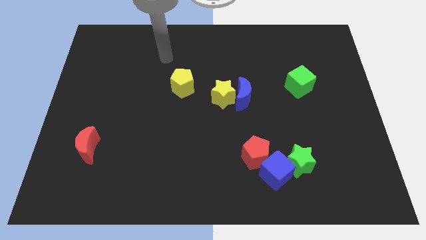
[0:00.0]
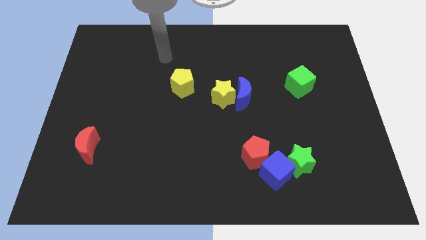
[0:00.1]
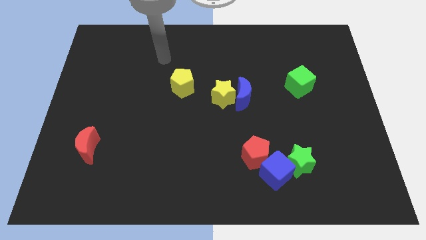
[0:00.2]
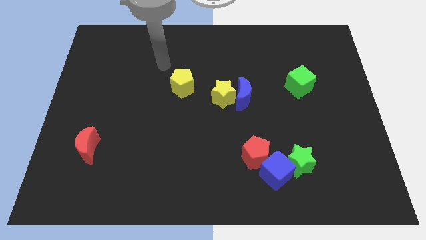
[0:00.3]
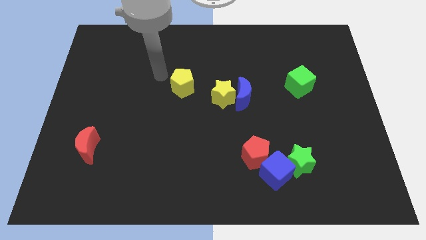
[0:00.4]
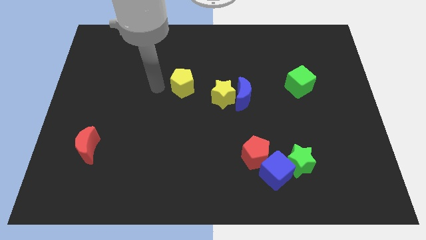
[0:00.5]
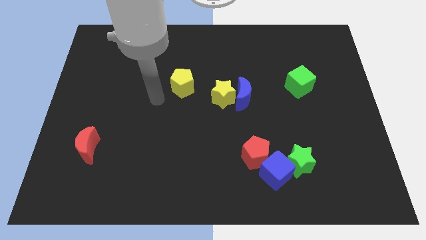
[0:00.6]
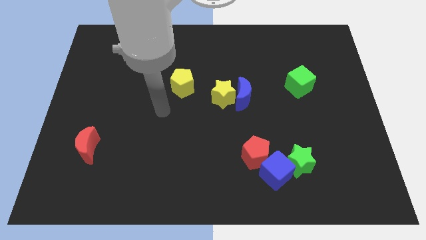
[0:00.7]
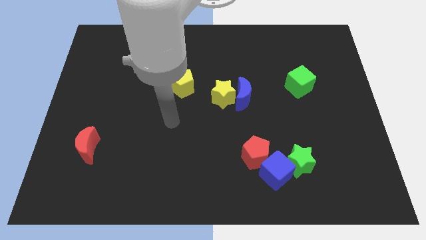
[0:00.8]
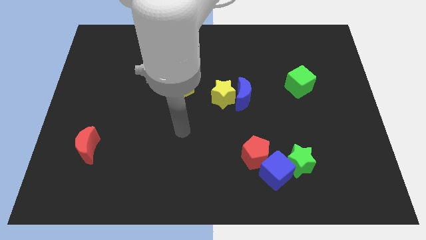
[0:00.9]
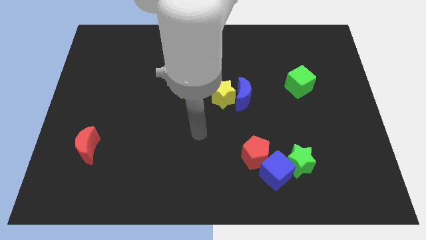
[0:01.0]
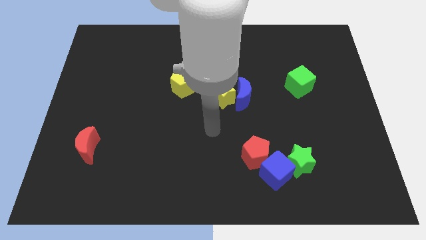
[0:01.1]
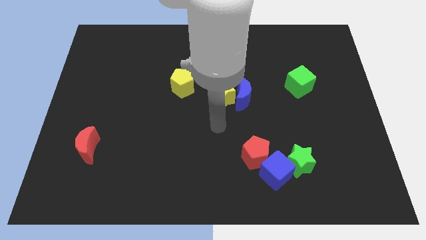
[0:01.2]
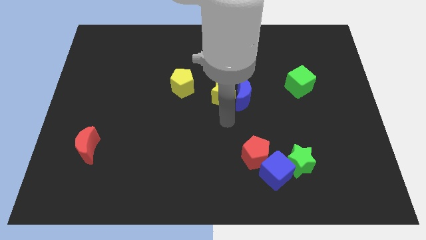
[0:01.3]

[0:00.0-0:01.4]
move your arm to the center of the board

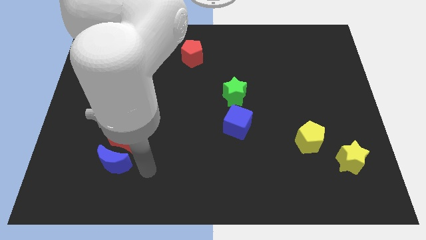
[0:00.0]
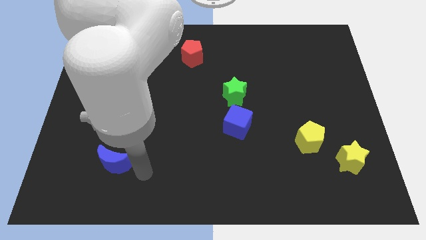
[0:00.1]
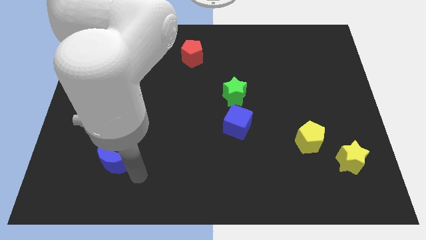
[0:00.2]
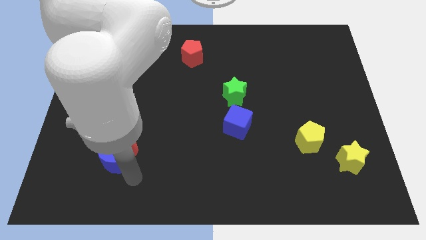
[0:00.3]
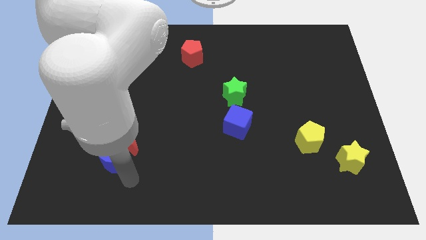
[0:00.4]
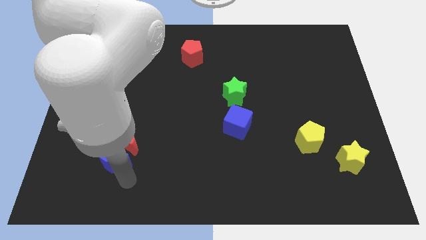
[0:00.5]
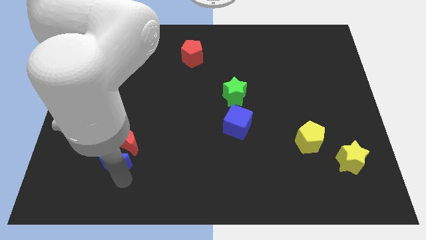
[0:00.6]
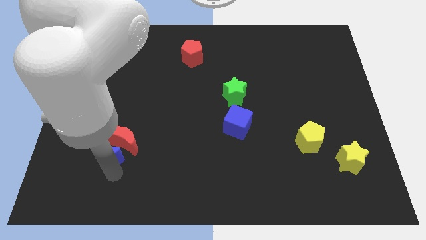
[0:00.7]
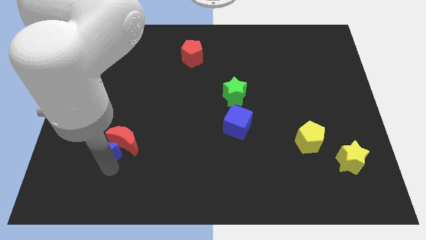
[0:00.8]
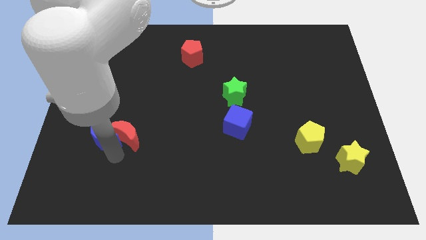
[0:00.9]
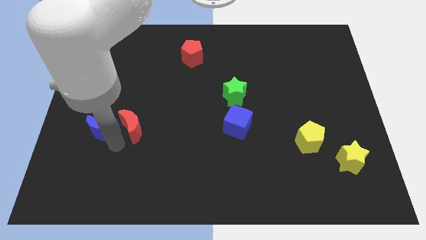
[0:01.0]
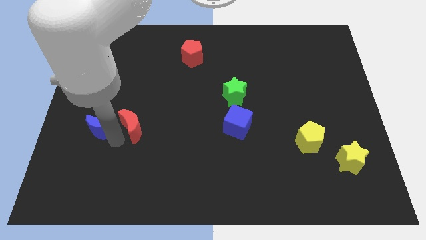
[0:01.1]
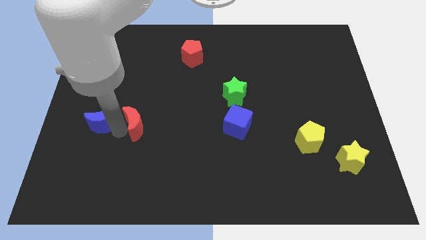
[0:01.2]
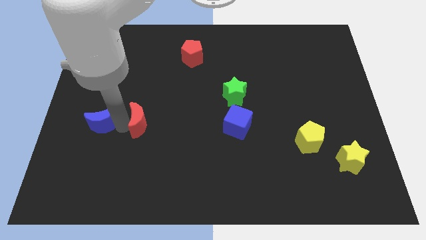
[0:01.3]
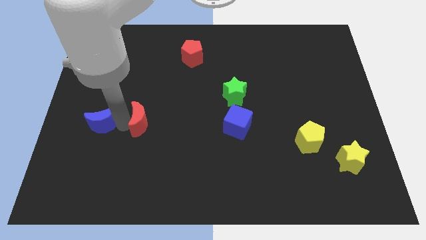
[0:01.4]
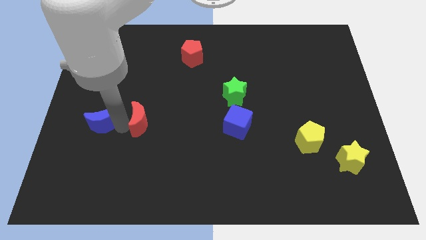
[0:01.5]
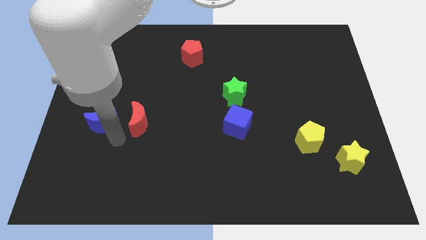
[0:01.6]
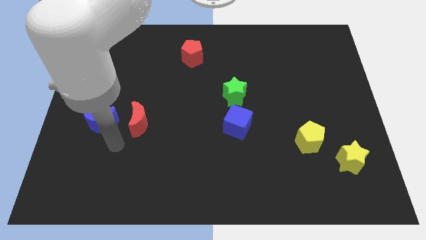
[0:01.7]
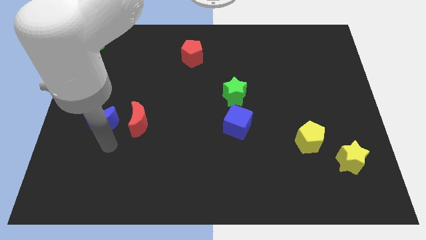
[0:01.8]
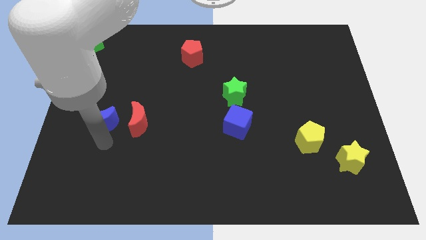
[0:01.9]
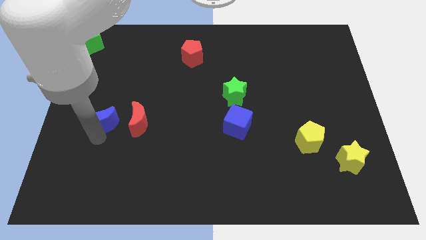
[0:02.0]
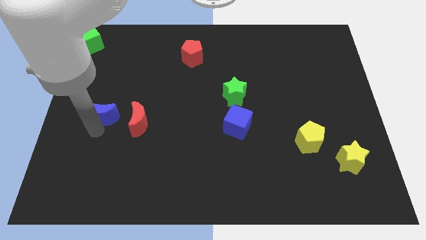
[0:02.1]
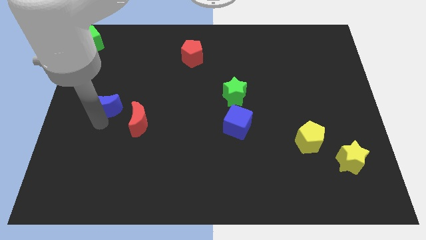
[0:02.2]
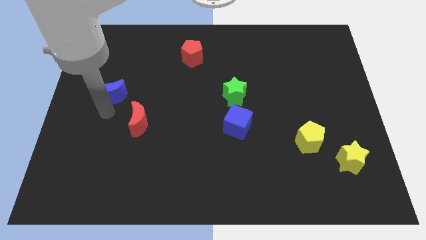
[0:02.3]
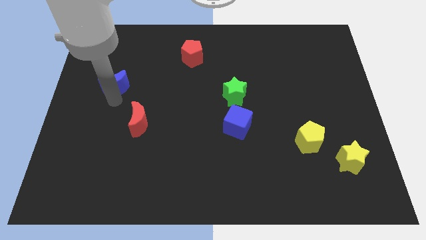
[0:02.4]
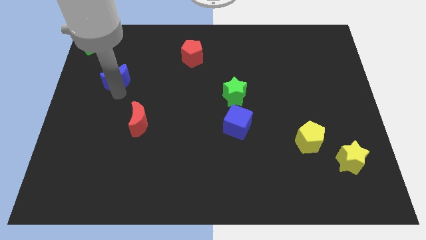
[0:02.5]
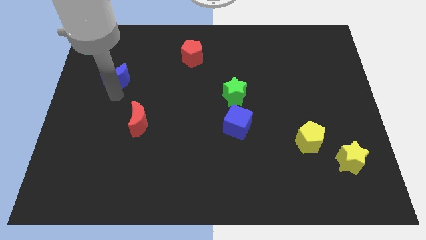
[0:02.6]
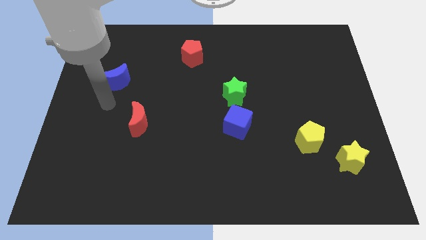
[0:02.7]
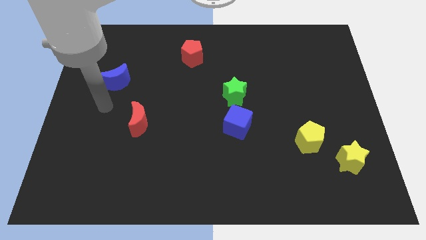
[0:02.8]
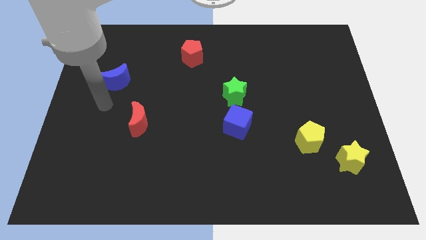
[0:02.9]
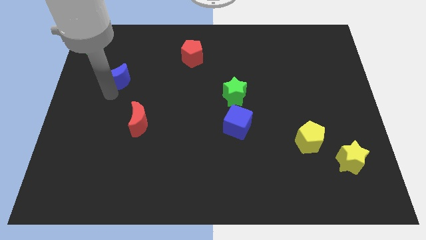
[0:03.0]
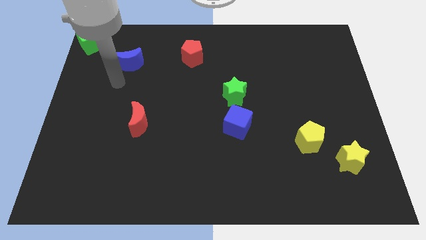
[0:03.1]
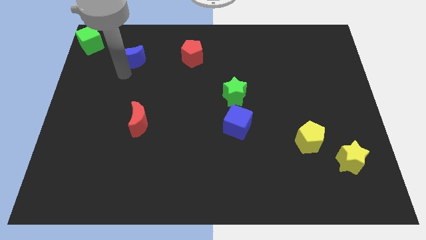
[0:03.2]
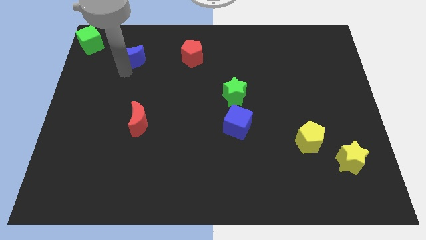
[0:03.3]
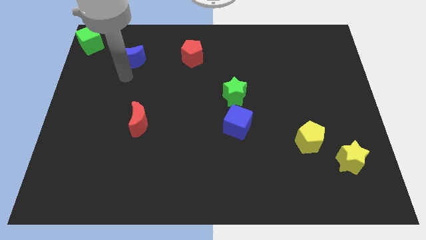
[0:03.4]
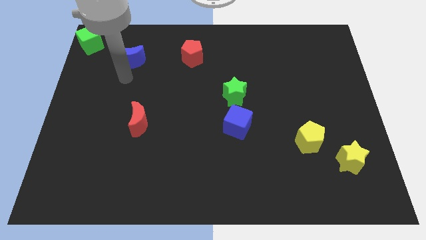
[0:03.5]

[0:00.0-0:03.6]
place the blue moon to the left of the red pentagon

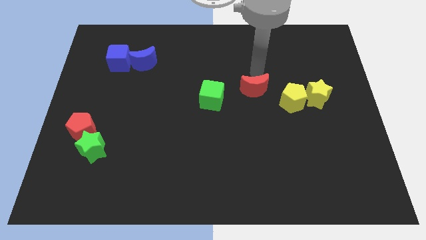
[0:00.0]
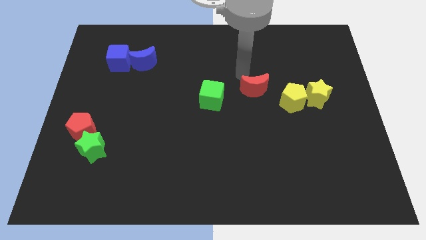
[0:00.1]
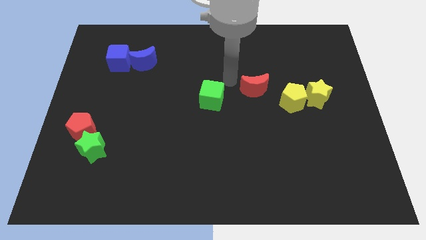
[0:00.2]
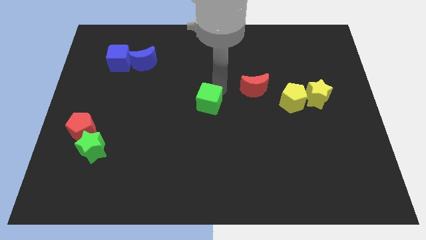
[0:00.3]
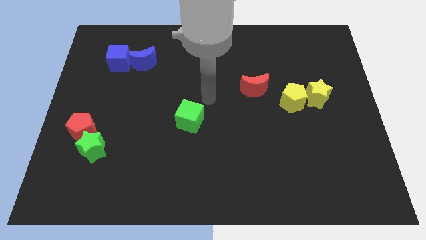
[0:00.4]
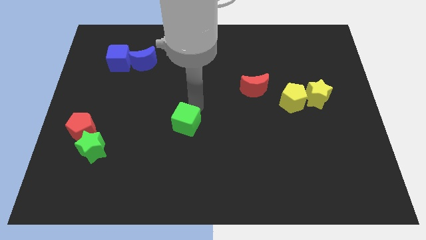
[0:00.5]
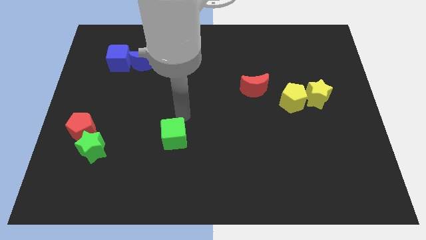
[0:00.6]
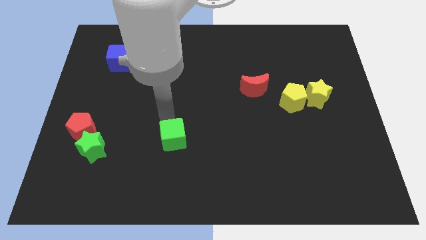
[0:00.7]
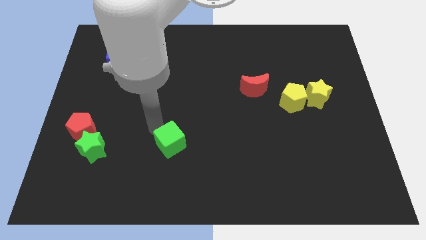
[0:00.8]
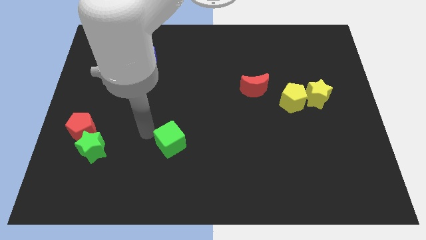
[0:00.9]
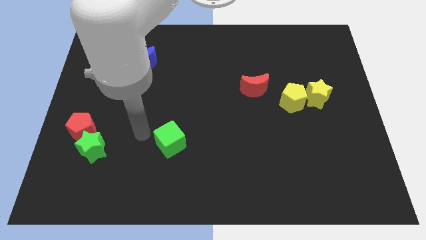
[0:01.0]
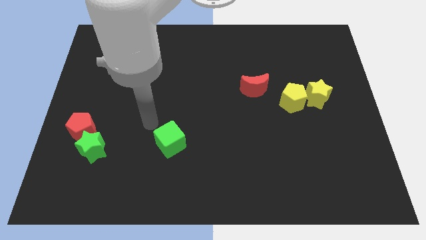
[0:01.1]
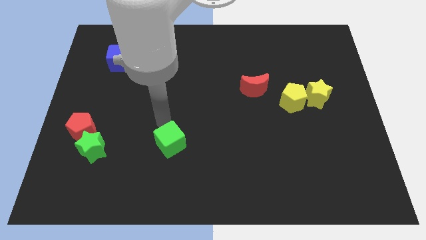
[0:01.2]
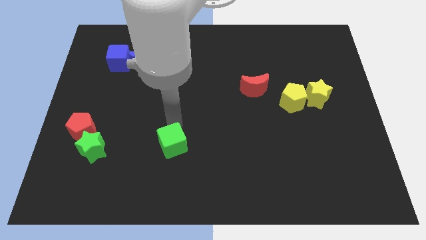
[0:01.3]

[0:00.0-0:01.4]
push the green cube to the right of the green star

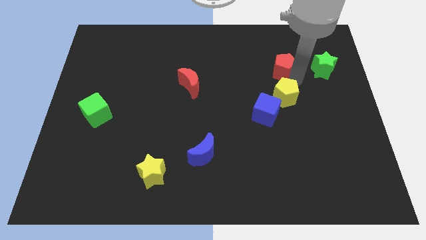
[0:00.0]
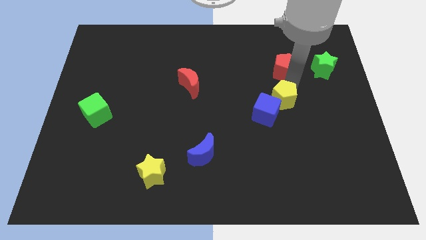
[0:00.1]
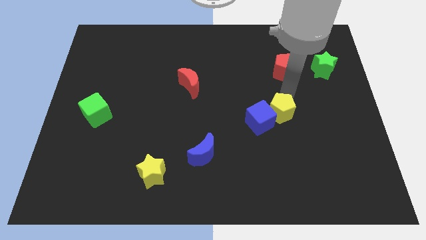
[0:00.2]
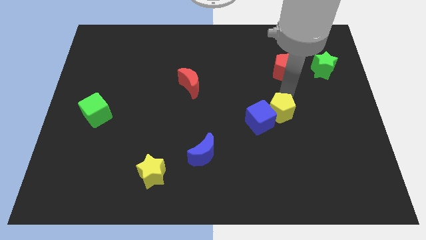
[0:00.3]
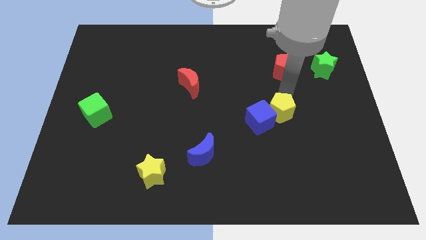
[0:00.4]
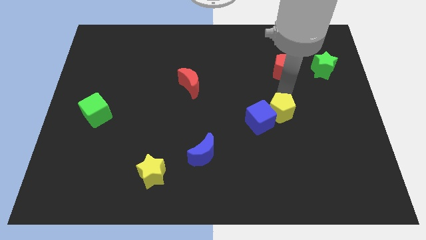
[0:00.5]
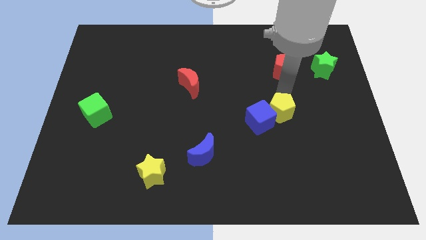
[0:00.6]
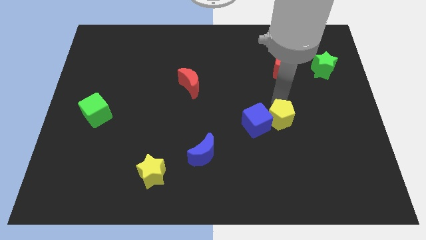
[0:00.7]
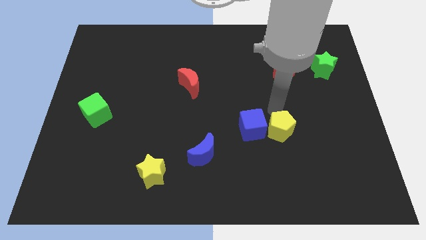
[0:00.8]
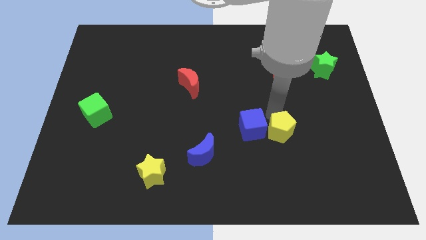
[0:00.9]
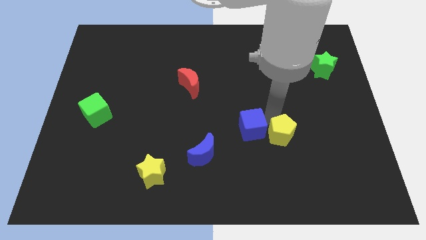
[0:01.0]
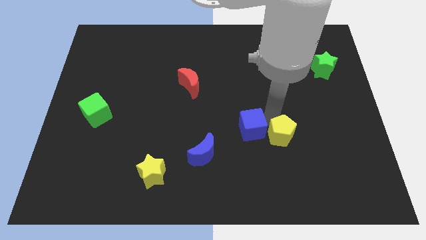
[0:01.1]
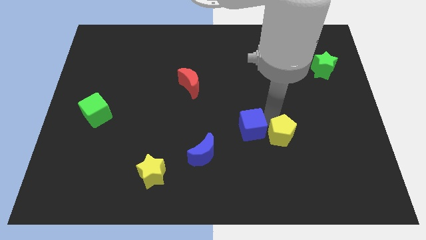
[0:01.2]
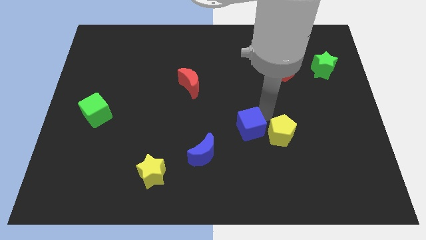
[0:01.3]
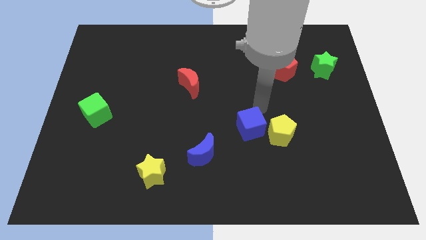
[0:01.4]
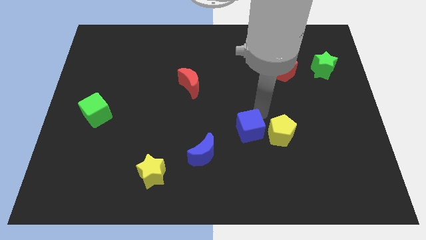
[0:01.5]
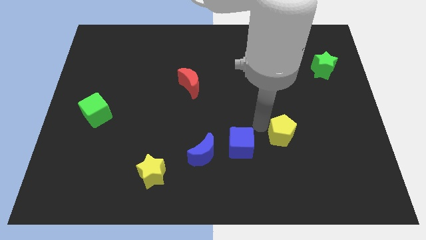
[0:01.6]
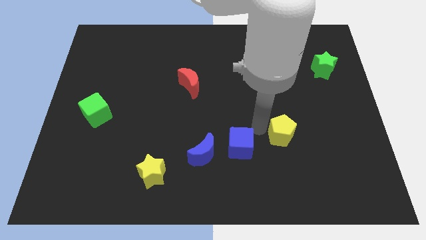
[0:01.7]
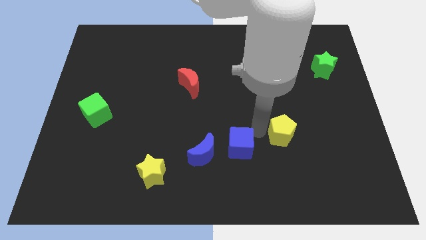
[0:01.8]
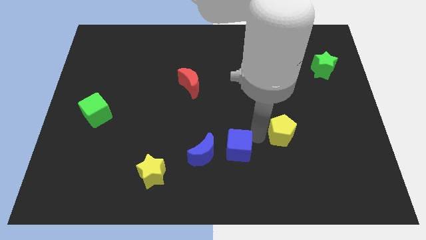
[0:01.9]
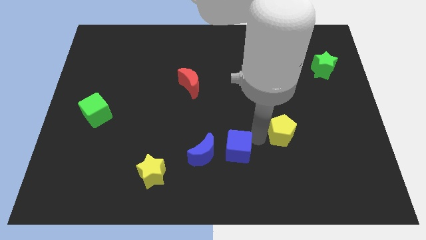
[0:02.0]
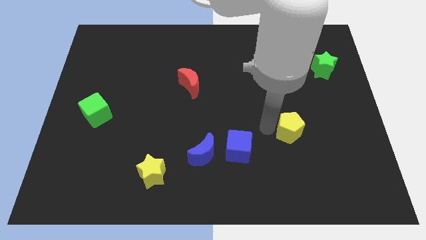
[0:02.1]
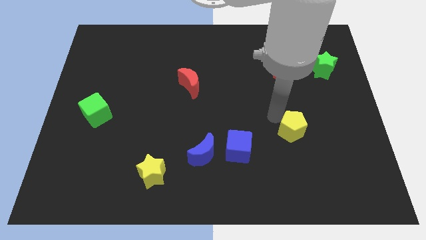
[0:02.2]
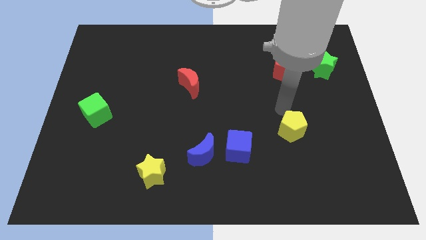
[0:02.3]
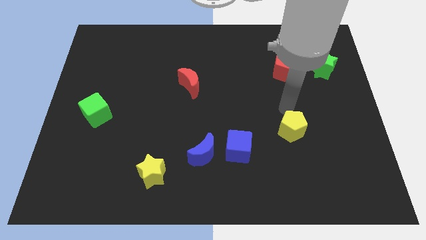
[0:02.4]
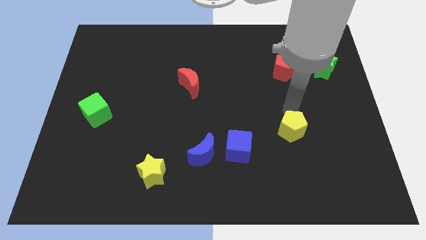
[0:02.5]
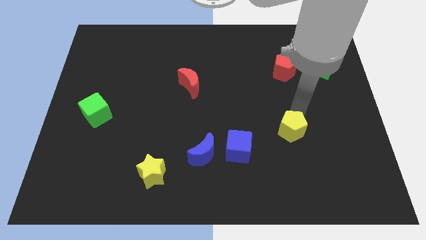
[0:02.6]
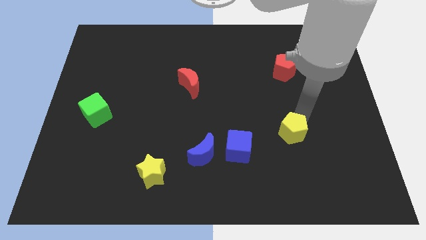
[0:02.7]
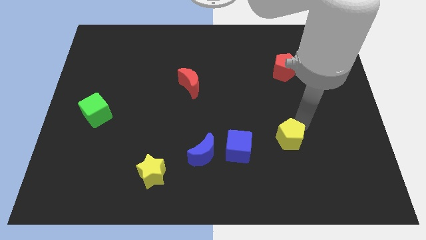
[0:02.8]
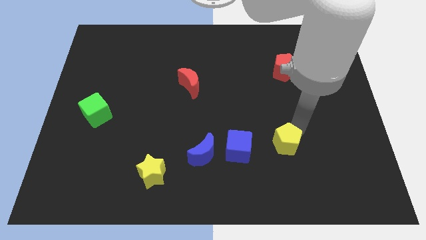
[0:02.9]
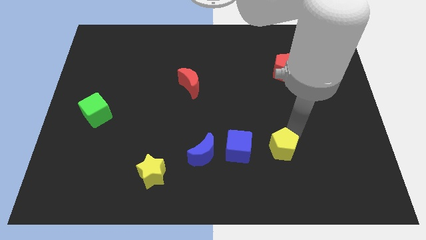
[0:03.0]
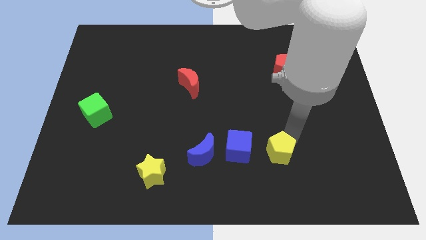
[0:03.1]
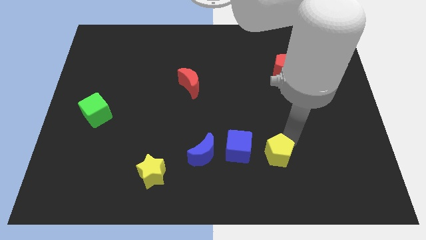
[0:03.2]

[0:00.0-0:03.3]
slide the blue cube and the yellow pentagon towards the bottom
